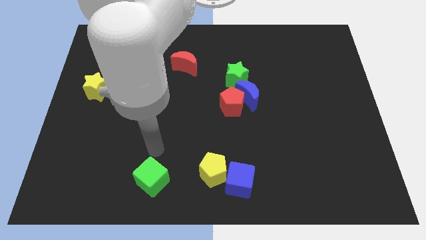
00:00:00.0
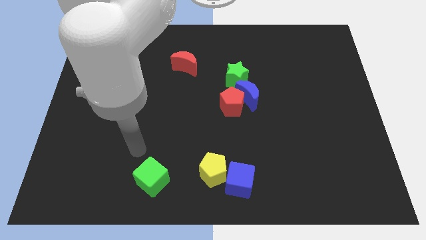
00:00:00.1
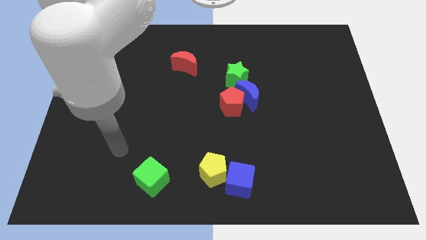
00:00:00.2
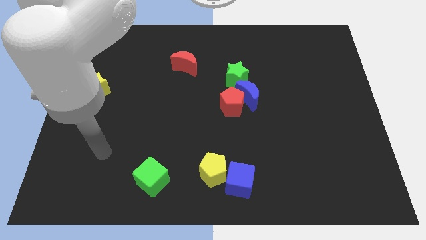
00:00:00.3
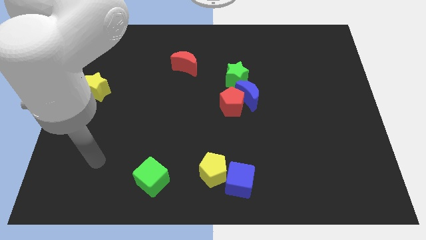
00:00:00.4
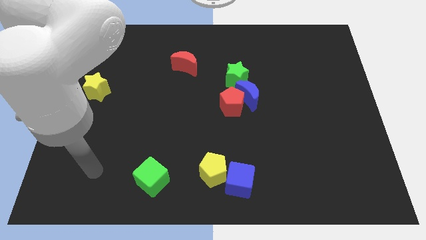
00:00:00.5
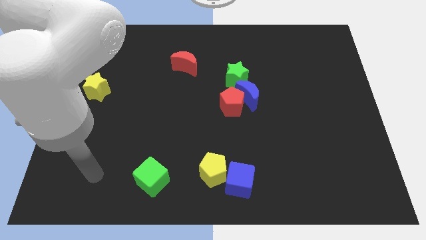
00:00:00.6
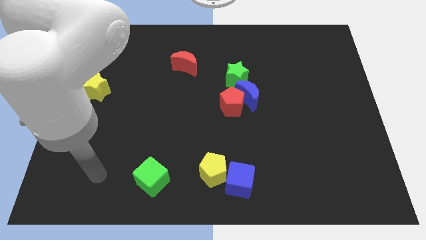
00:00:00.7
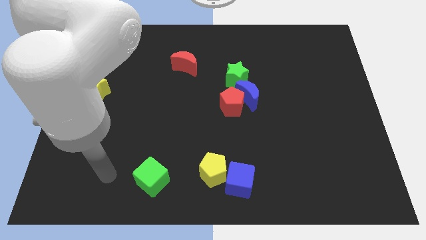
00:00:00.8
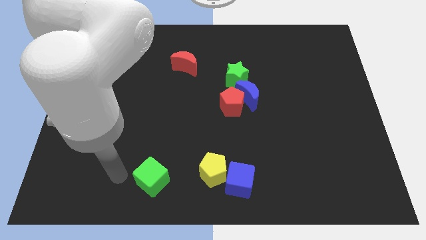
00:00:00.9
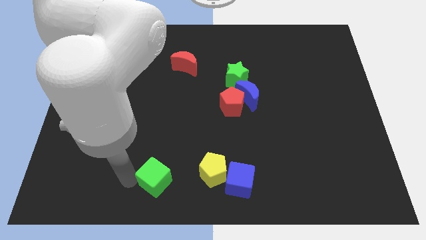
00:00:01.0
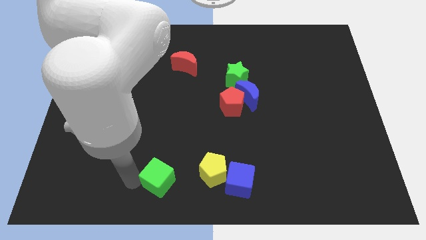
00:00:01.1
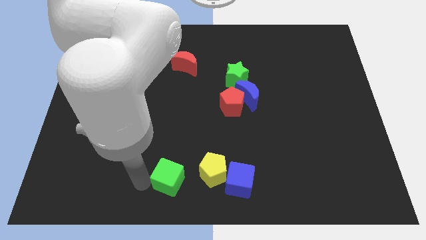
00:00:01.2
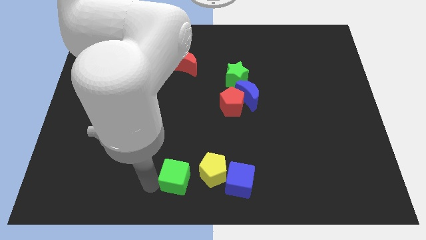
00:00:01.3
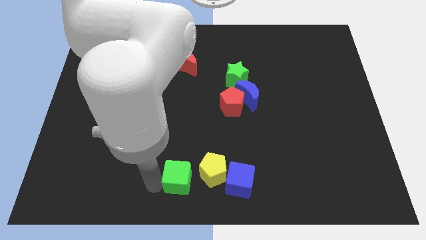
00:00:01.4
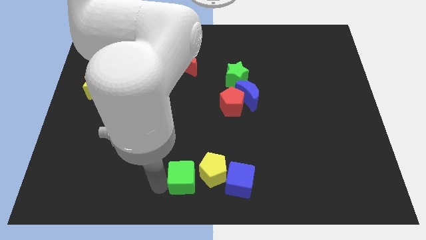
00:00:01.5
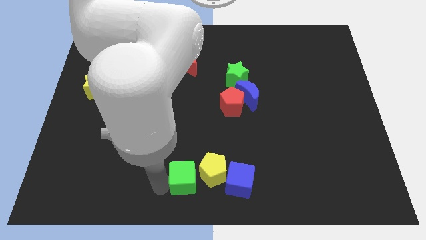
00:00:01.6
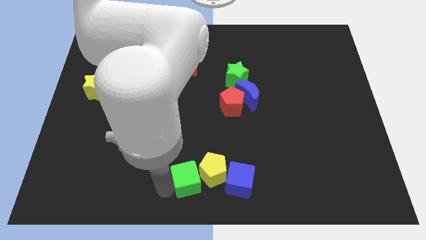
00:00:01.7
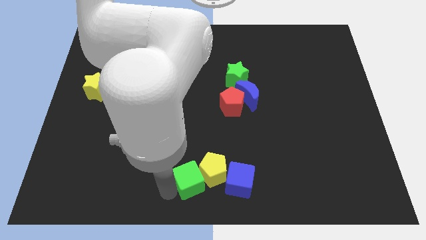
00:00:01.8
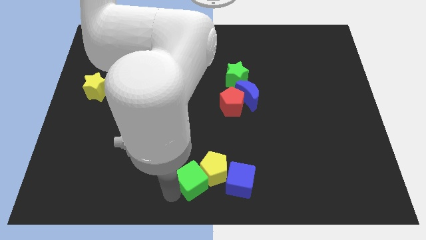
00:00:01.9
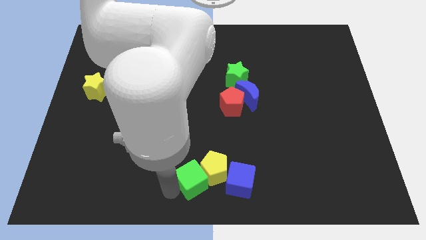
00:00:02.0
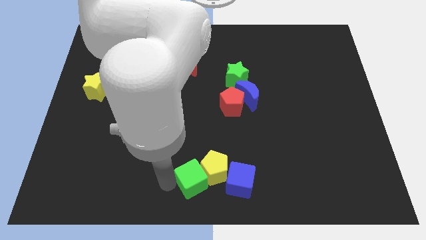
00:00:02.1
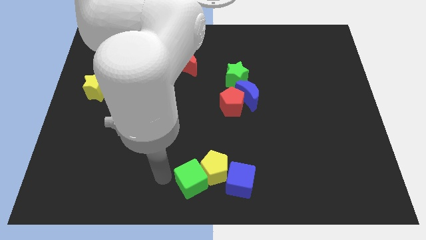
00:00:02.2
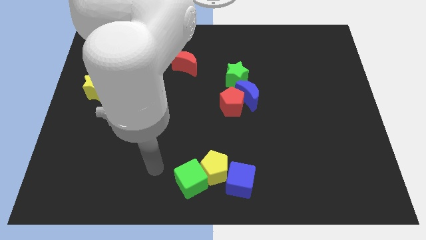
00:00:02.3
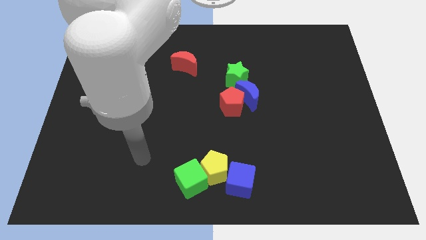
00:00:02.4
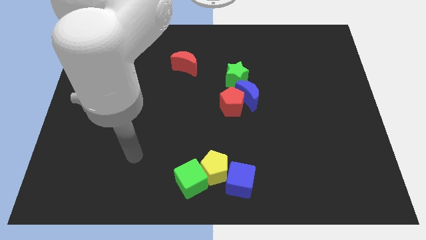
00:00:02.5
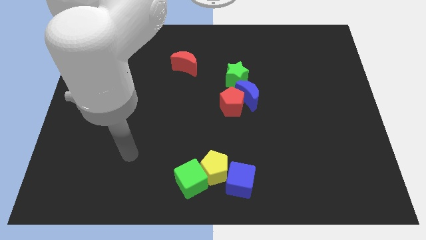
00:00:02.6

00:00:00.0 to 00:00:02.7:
push the green cube to the left side of the yellow pentagon

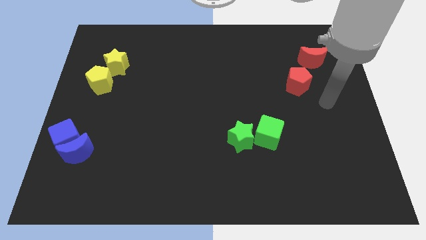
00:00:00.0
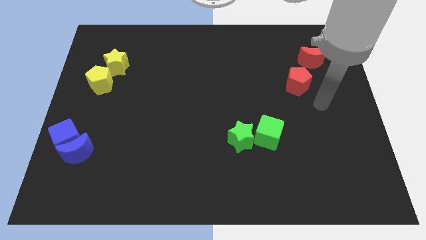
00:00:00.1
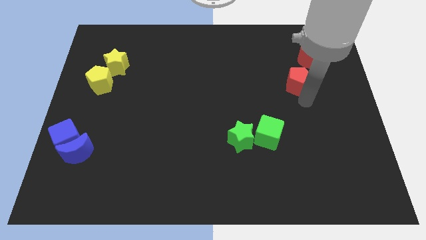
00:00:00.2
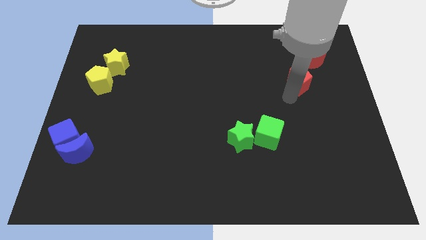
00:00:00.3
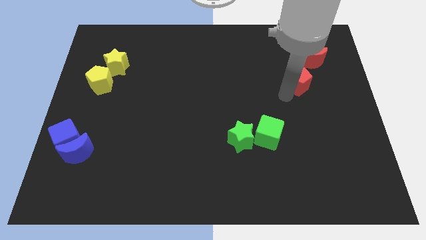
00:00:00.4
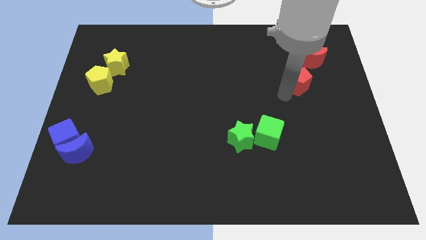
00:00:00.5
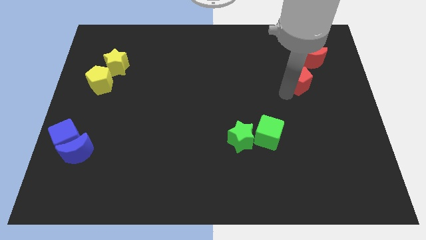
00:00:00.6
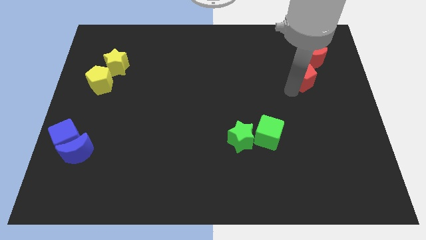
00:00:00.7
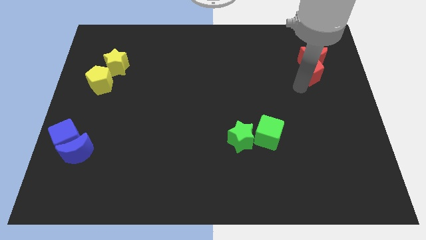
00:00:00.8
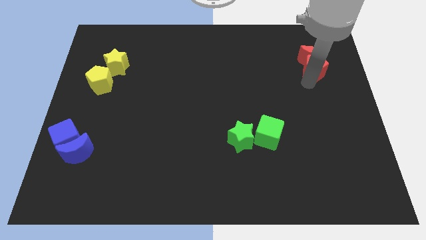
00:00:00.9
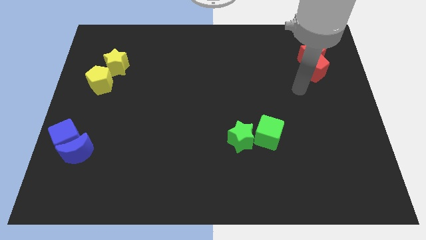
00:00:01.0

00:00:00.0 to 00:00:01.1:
put the red blocks together

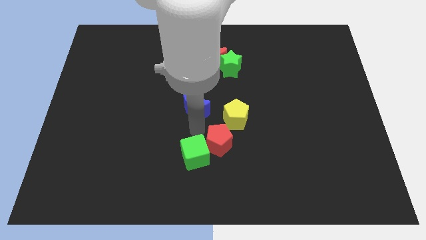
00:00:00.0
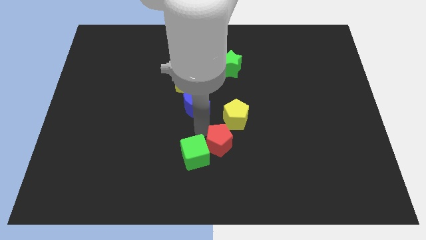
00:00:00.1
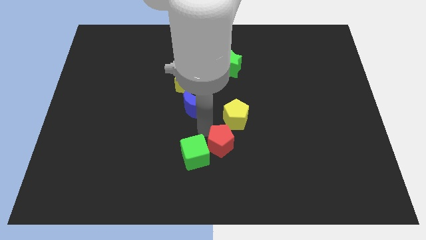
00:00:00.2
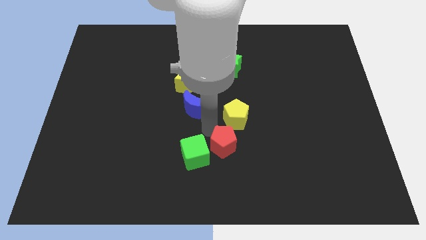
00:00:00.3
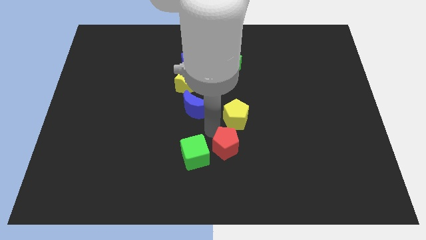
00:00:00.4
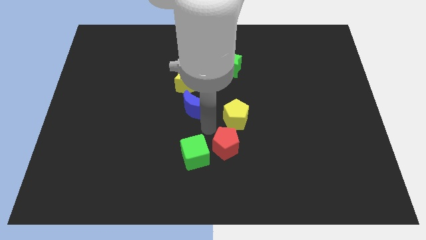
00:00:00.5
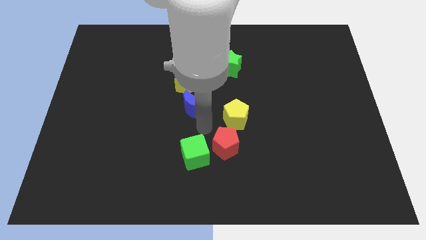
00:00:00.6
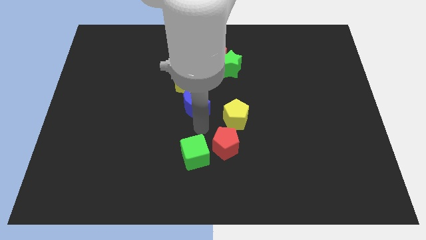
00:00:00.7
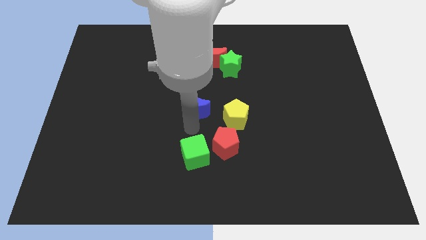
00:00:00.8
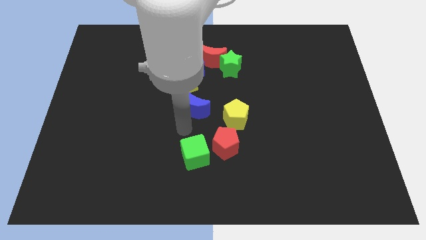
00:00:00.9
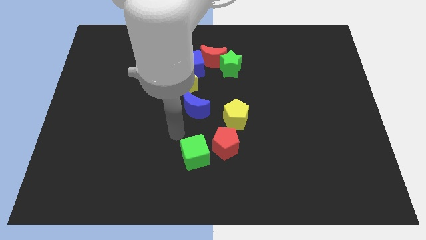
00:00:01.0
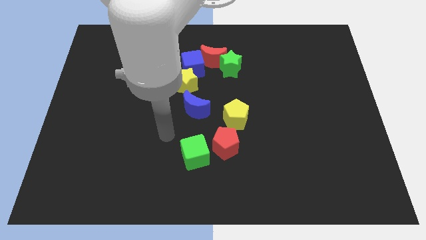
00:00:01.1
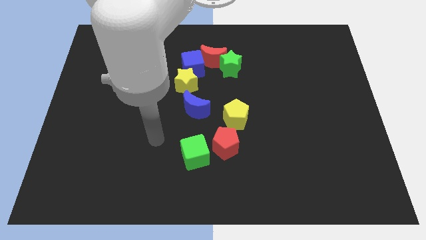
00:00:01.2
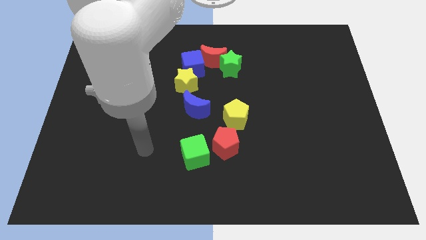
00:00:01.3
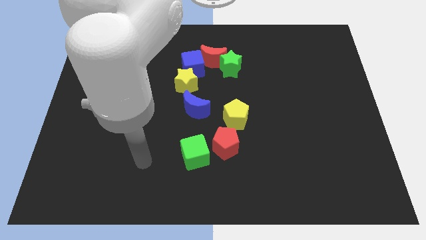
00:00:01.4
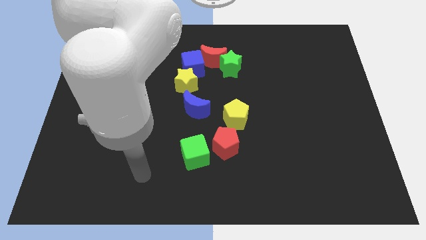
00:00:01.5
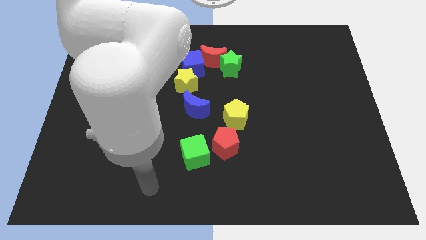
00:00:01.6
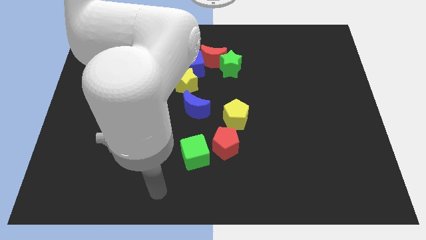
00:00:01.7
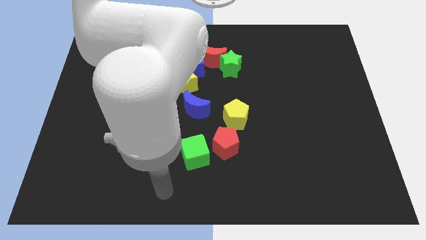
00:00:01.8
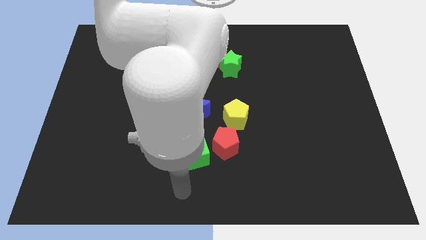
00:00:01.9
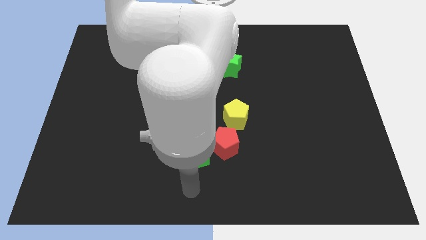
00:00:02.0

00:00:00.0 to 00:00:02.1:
slightly push the red pentagon

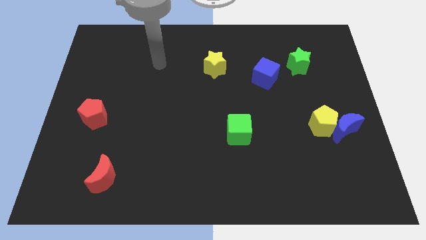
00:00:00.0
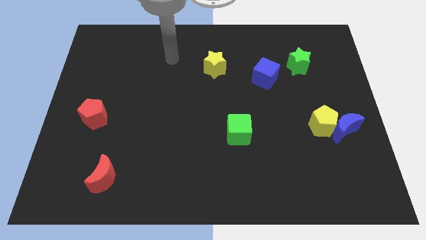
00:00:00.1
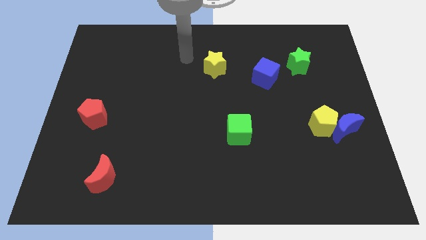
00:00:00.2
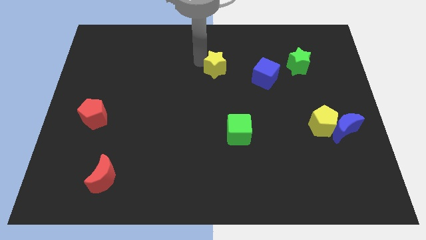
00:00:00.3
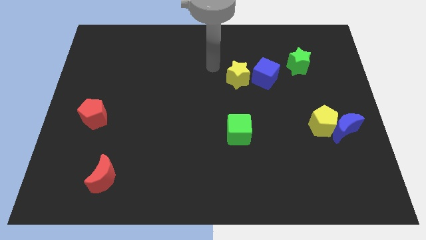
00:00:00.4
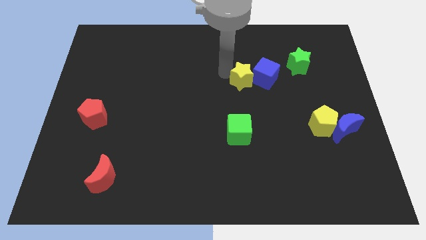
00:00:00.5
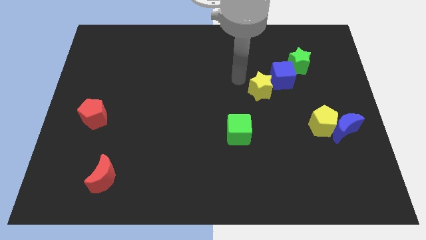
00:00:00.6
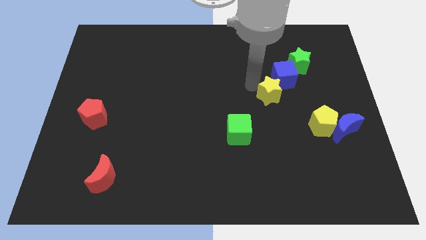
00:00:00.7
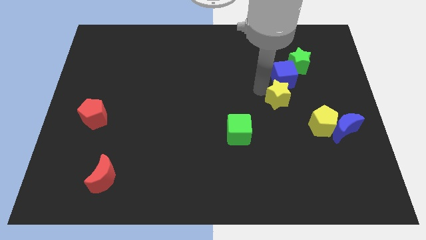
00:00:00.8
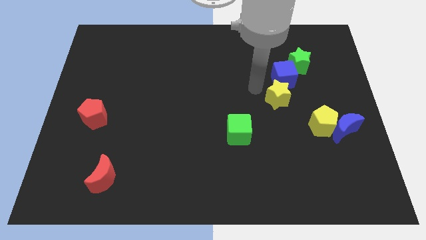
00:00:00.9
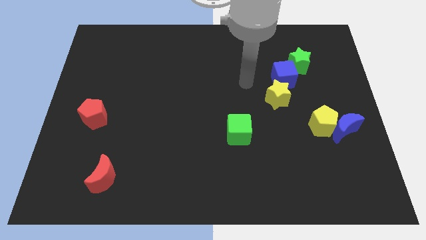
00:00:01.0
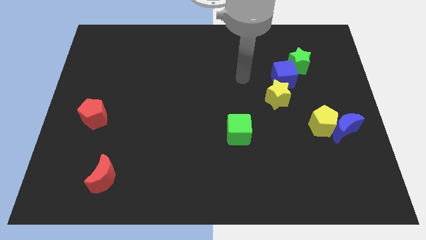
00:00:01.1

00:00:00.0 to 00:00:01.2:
place the yellow star to the bottom of blue cube

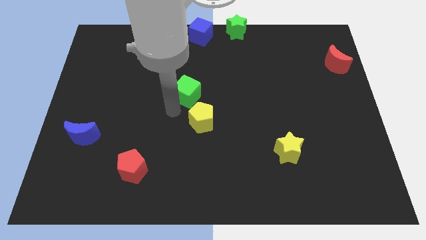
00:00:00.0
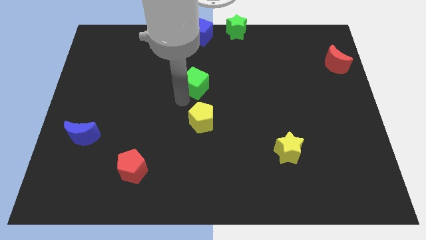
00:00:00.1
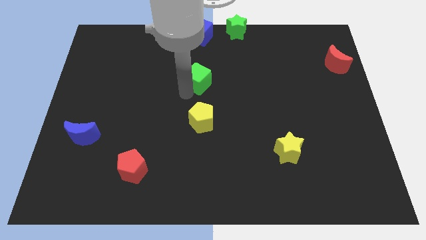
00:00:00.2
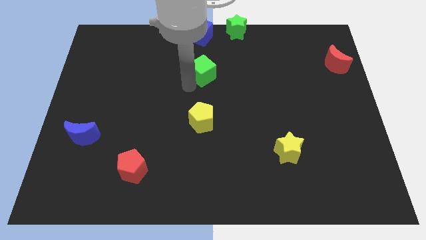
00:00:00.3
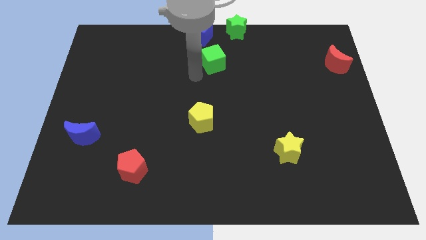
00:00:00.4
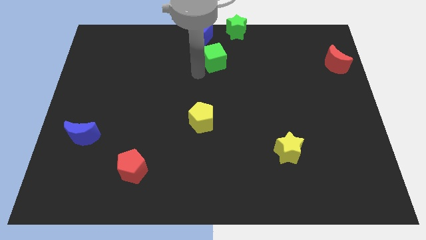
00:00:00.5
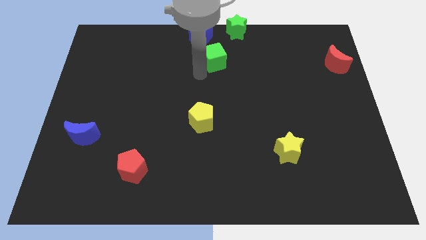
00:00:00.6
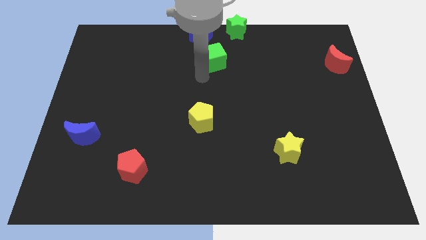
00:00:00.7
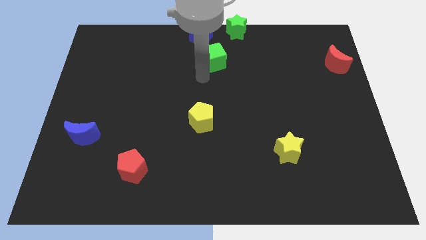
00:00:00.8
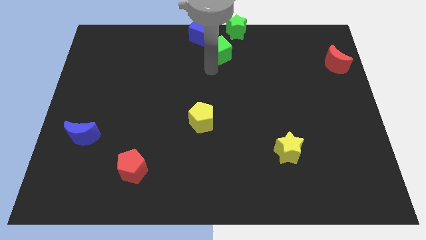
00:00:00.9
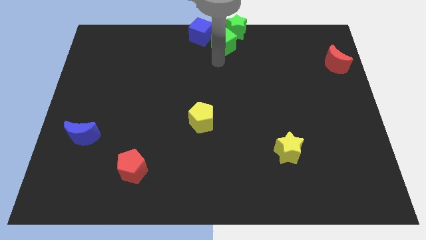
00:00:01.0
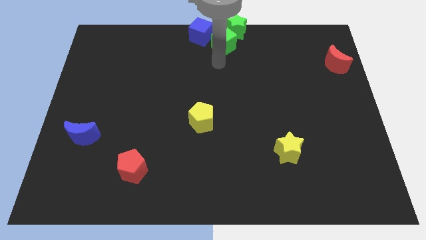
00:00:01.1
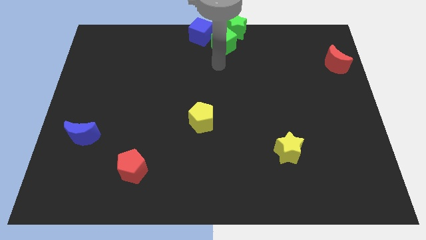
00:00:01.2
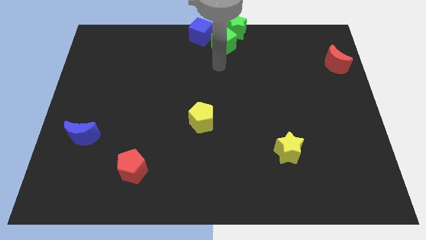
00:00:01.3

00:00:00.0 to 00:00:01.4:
move the green cube to the top center of the board

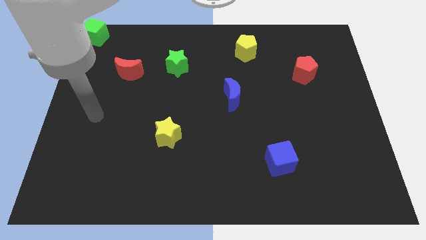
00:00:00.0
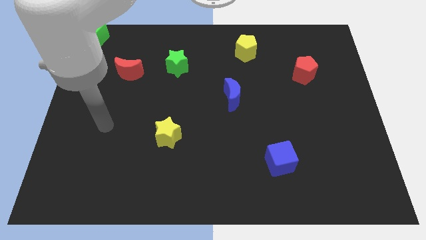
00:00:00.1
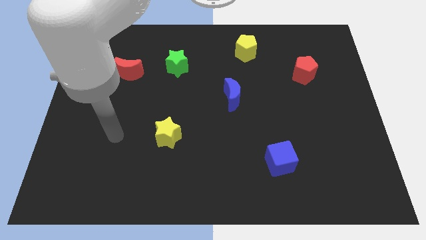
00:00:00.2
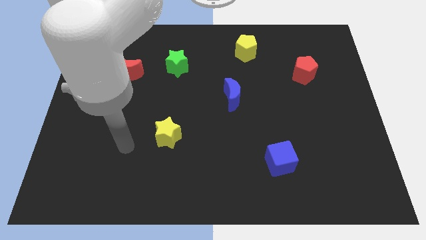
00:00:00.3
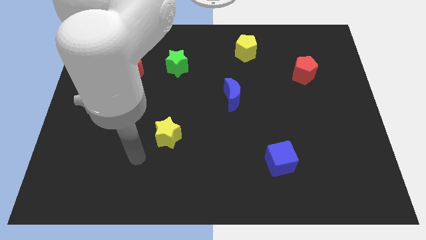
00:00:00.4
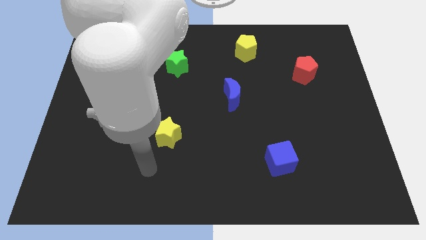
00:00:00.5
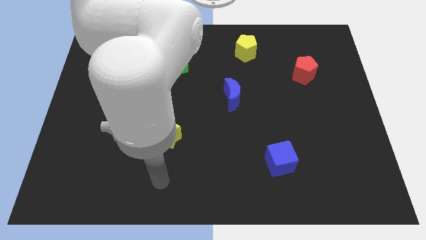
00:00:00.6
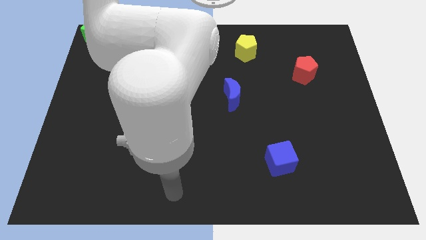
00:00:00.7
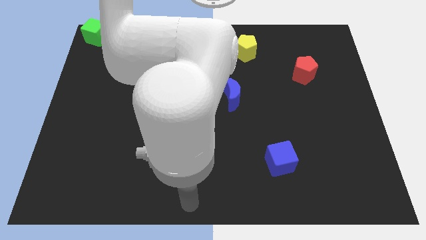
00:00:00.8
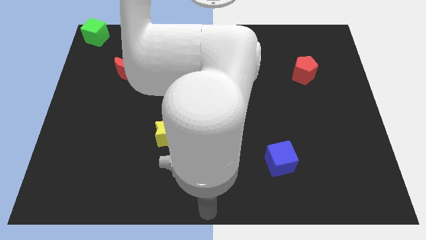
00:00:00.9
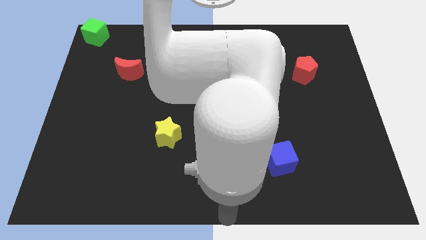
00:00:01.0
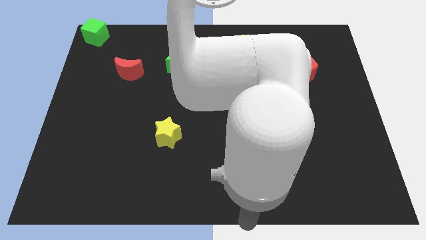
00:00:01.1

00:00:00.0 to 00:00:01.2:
place your arm at the bottom center
